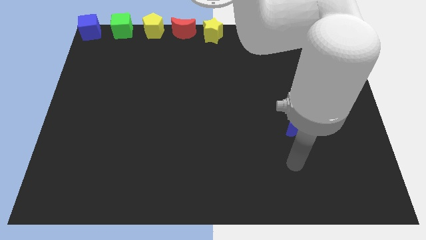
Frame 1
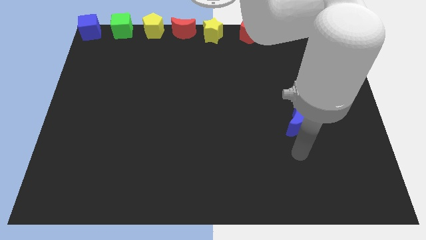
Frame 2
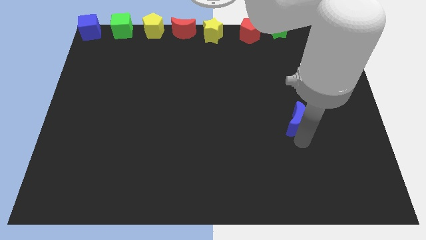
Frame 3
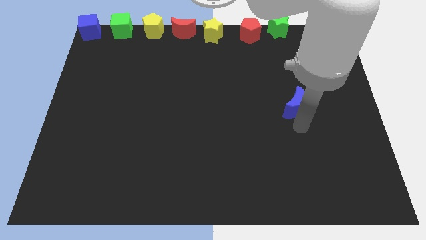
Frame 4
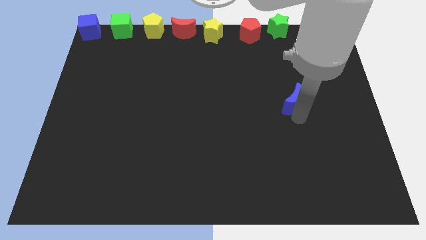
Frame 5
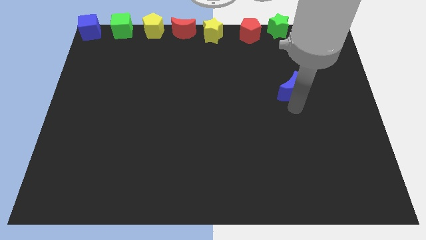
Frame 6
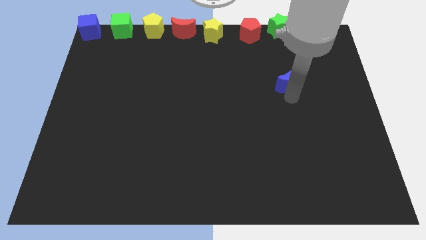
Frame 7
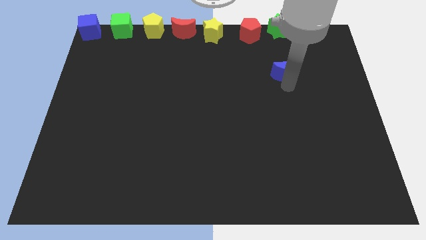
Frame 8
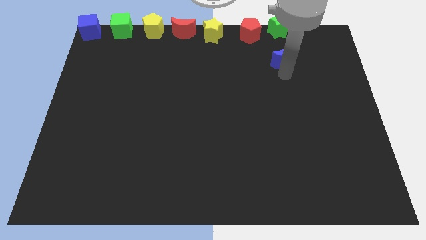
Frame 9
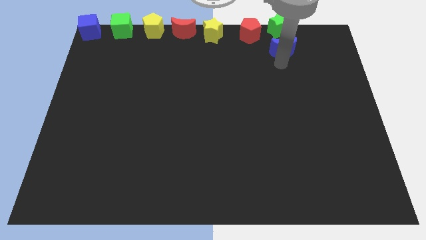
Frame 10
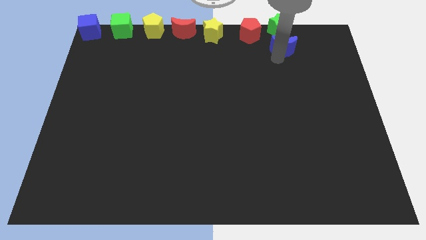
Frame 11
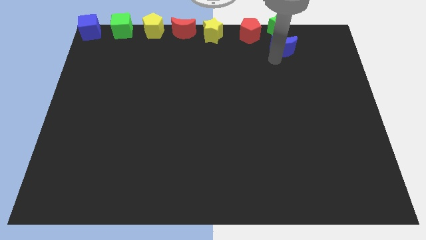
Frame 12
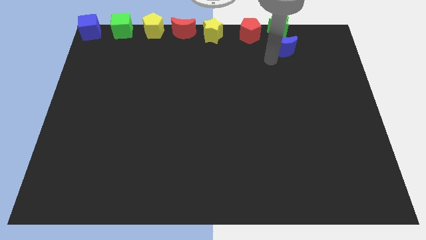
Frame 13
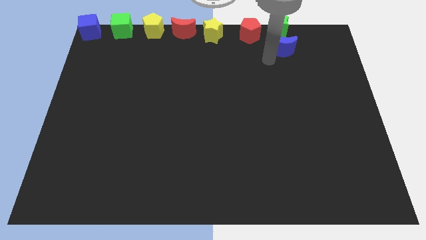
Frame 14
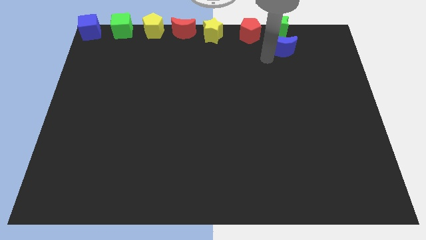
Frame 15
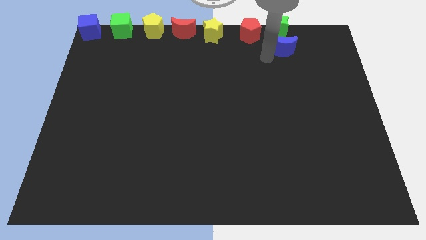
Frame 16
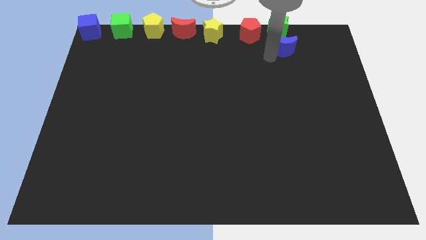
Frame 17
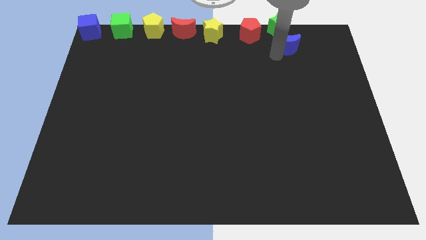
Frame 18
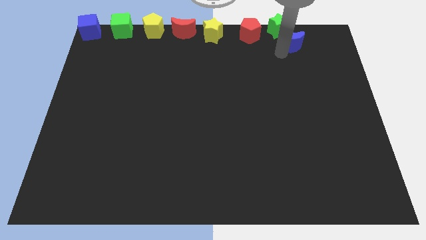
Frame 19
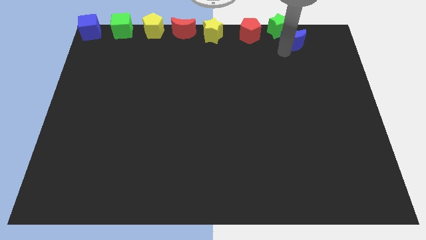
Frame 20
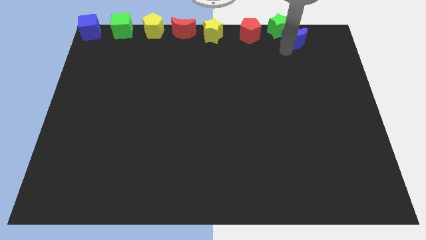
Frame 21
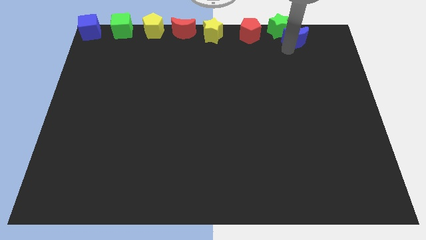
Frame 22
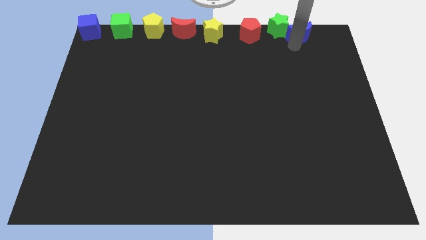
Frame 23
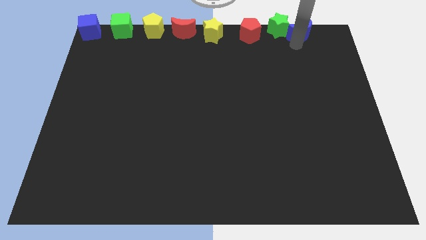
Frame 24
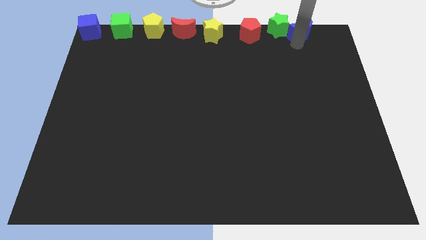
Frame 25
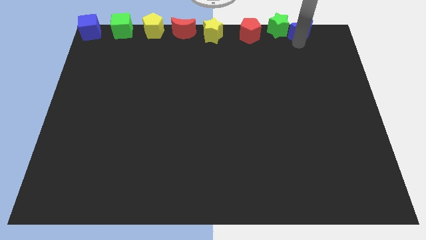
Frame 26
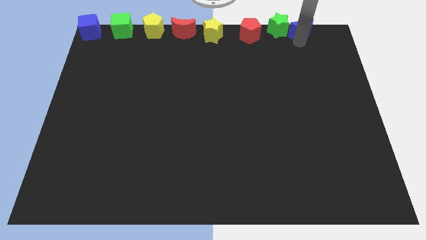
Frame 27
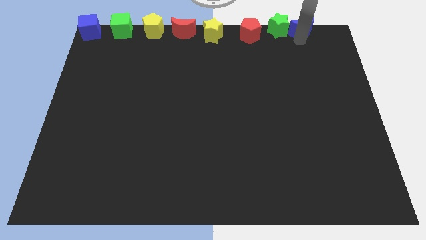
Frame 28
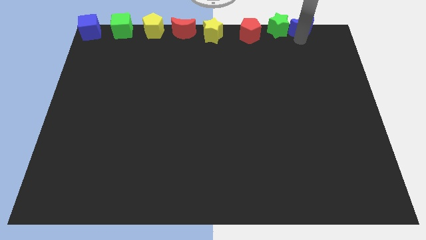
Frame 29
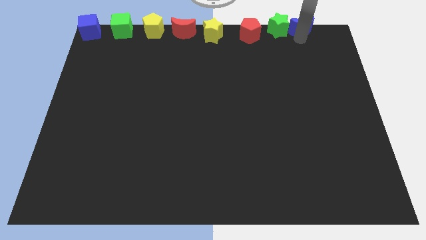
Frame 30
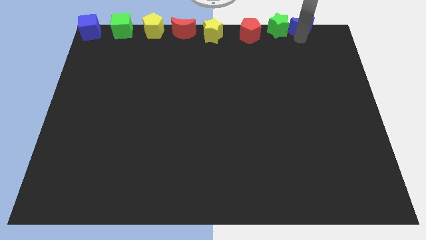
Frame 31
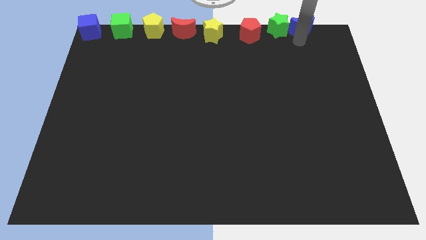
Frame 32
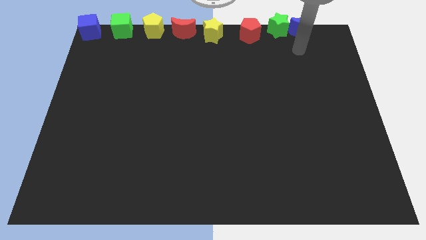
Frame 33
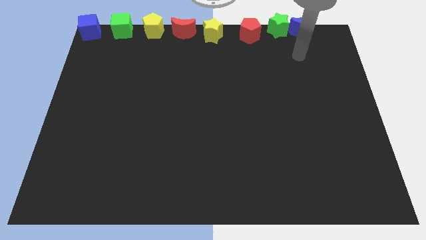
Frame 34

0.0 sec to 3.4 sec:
push the blue crescent to the right of the green star

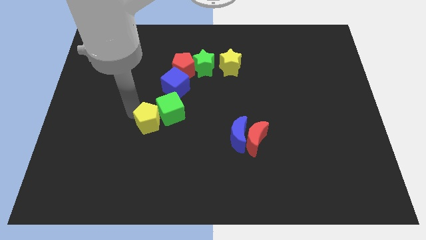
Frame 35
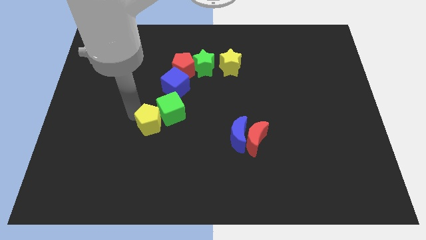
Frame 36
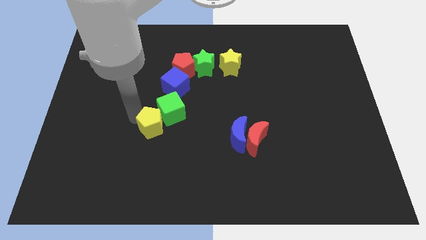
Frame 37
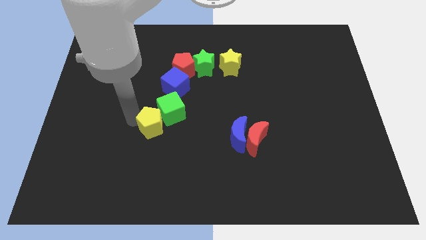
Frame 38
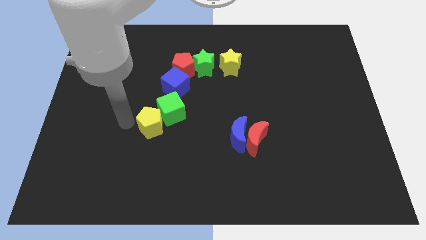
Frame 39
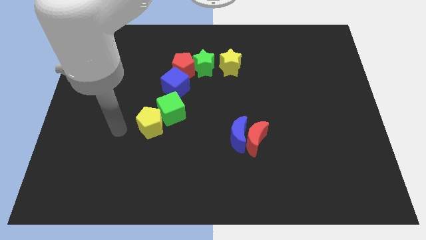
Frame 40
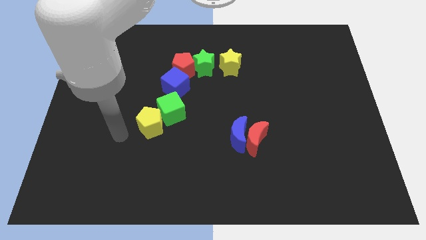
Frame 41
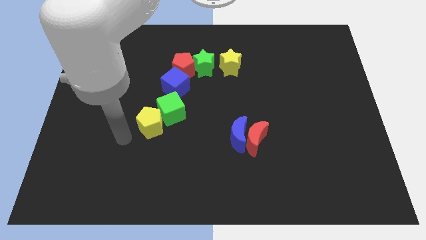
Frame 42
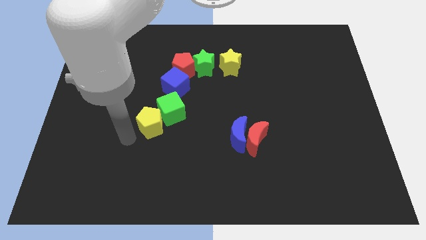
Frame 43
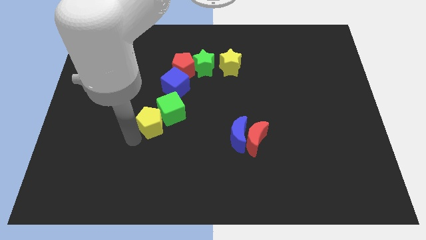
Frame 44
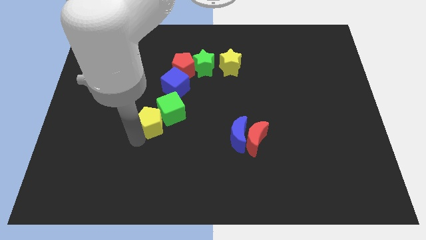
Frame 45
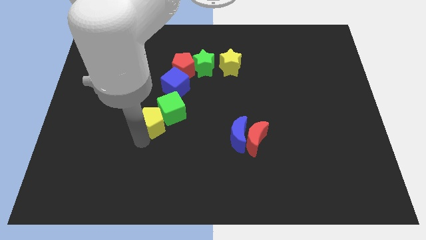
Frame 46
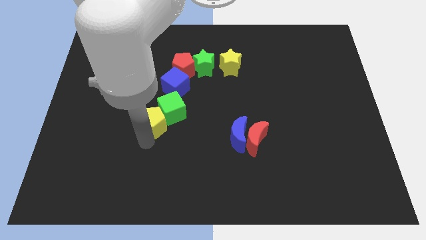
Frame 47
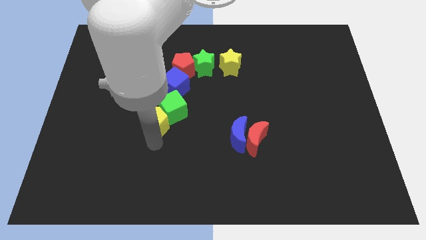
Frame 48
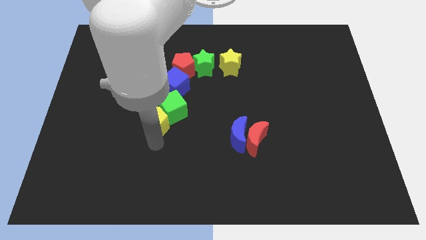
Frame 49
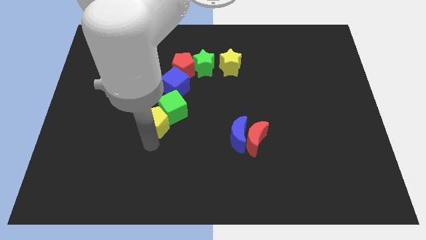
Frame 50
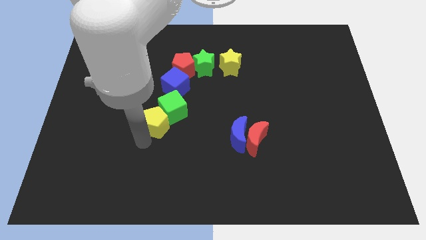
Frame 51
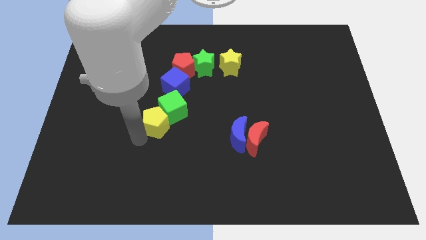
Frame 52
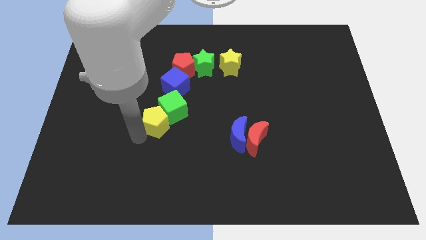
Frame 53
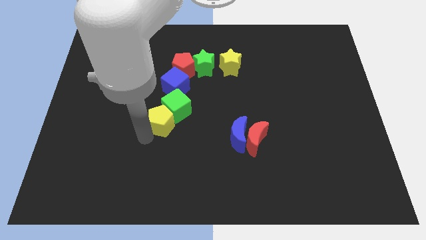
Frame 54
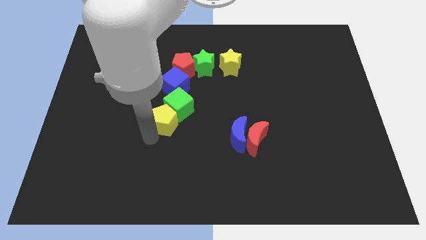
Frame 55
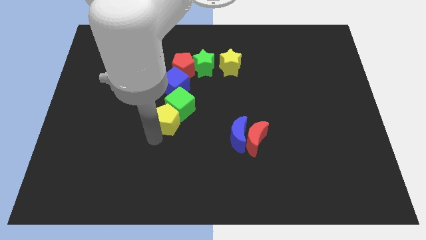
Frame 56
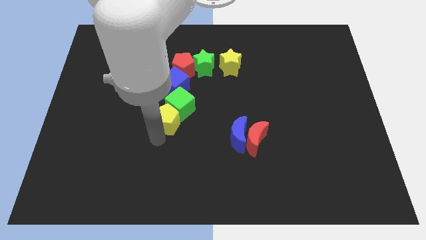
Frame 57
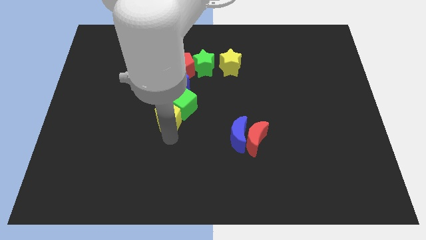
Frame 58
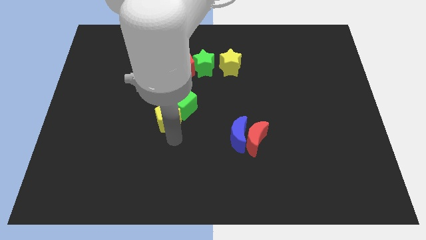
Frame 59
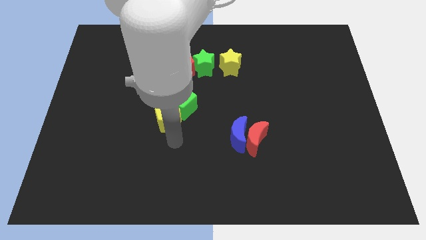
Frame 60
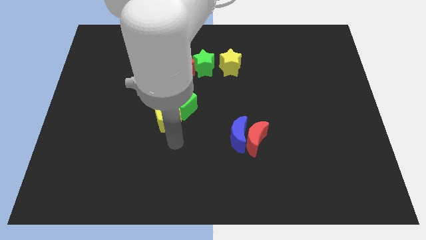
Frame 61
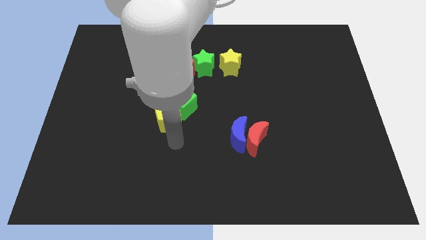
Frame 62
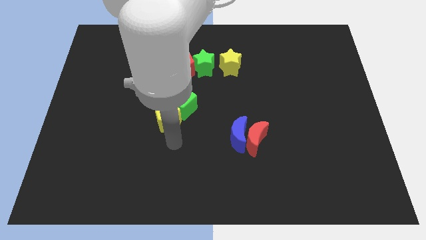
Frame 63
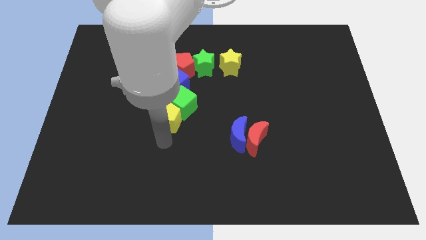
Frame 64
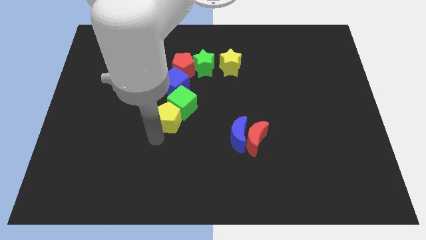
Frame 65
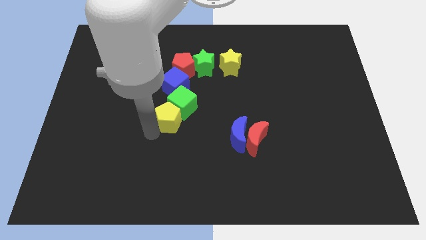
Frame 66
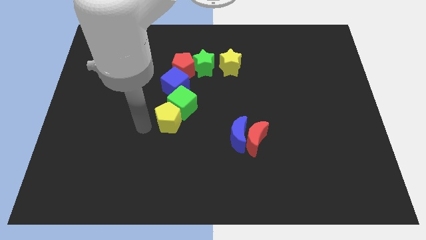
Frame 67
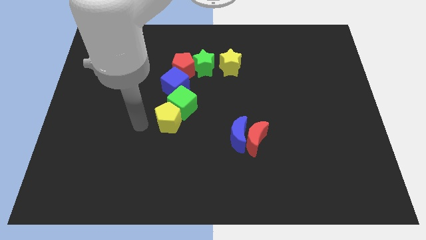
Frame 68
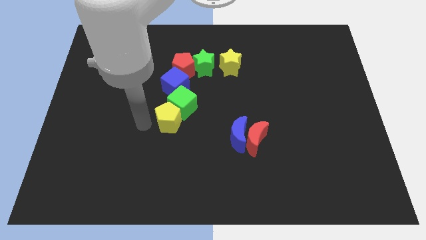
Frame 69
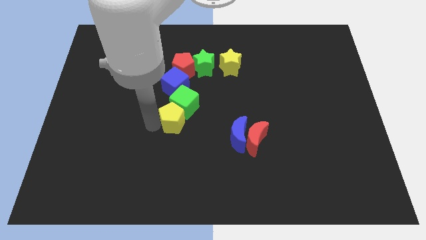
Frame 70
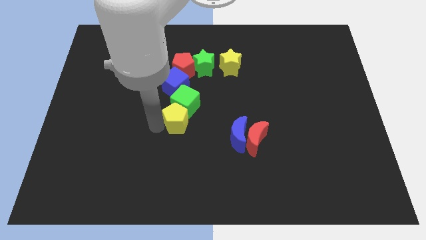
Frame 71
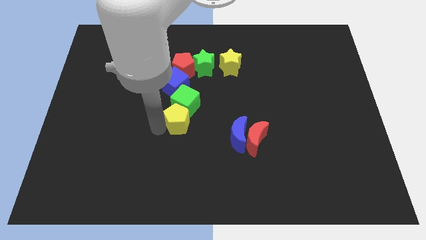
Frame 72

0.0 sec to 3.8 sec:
move the green cube and yellow pentagon diagonally below the blue cube

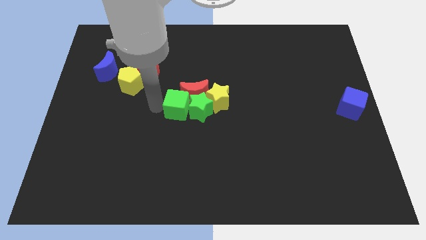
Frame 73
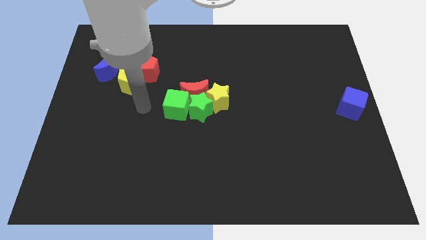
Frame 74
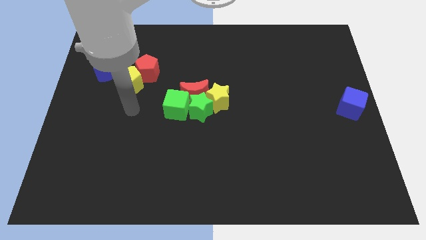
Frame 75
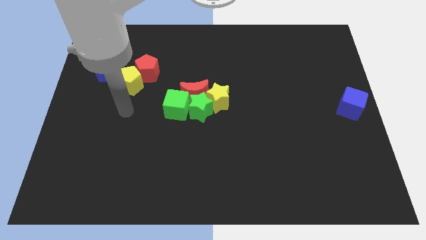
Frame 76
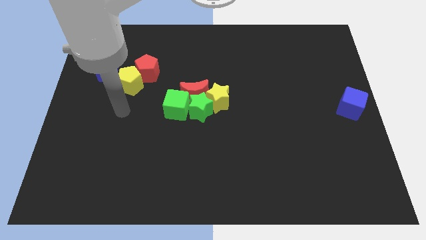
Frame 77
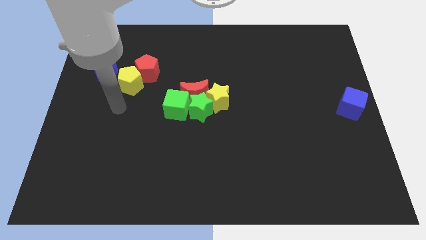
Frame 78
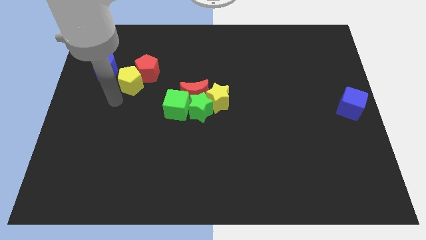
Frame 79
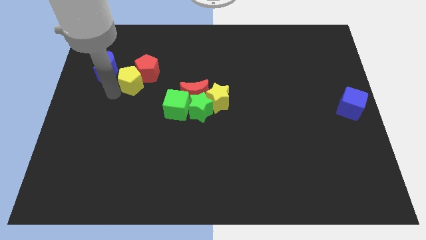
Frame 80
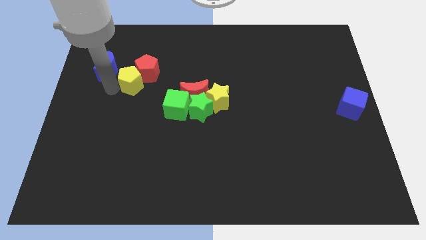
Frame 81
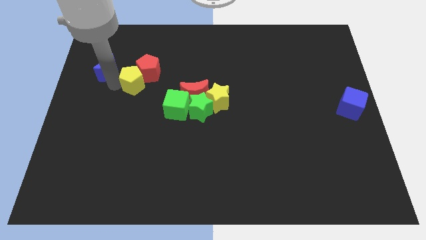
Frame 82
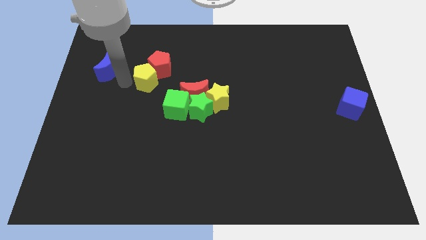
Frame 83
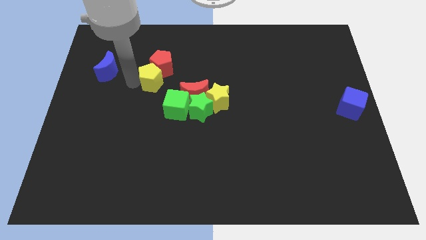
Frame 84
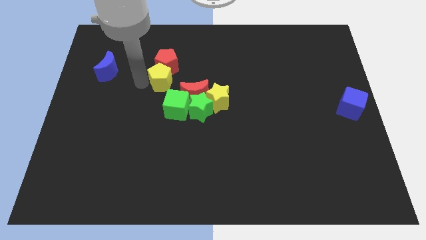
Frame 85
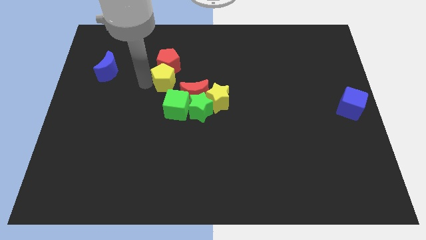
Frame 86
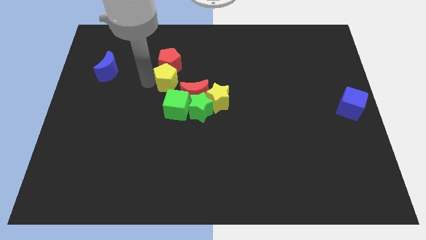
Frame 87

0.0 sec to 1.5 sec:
move your arm away from the green cube

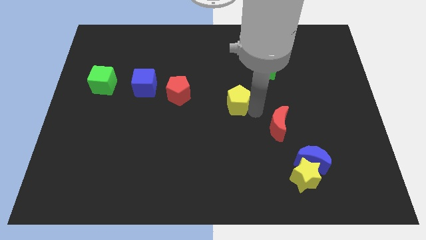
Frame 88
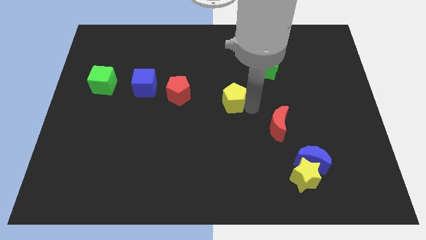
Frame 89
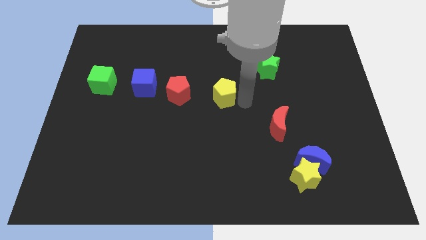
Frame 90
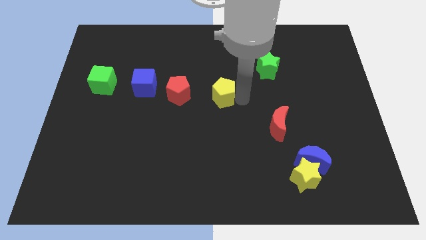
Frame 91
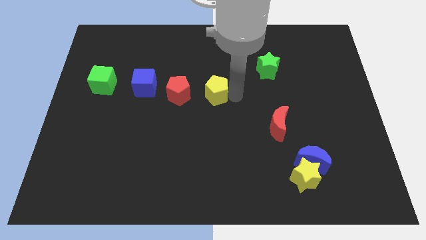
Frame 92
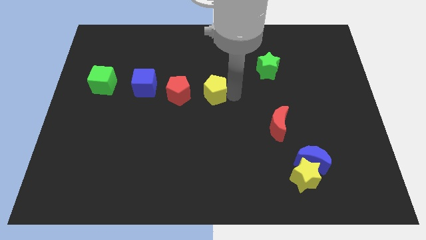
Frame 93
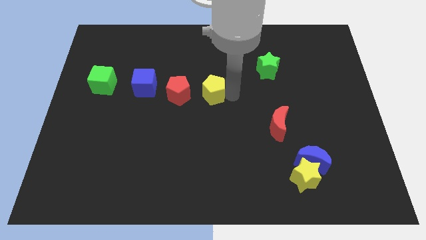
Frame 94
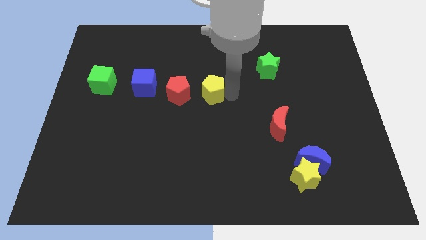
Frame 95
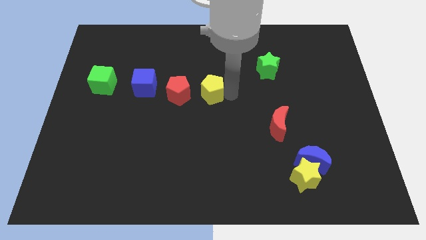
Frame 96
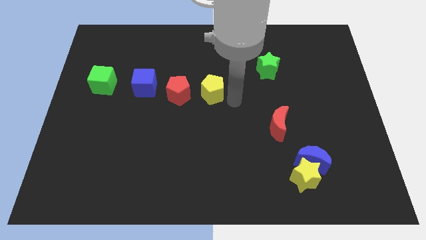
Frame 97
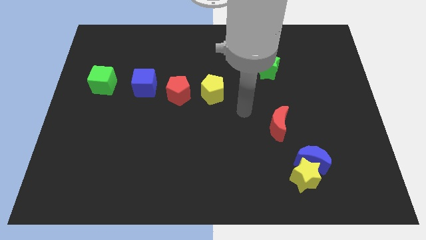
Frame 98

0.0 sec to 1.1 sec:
place the yellow pentagon to the right of the red pentagon
